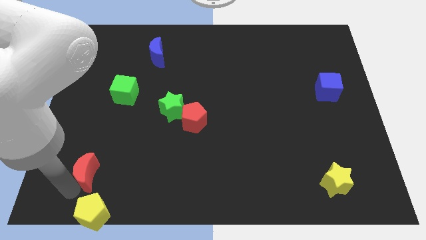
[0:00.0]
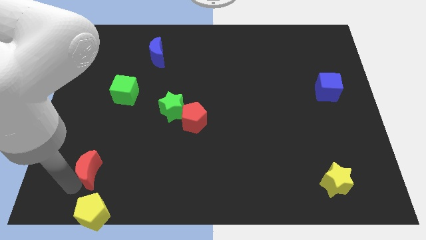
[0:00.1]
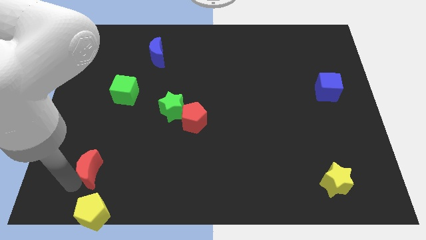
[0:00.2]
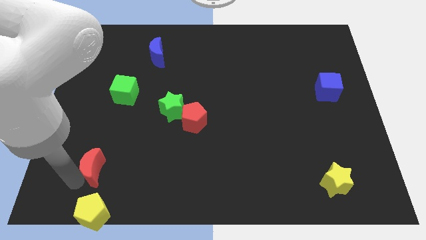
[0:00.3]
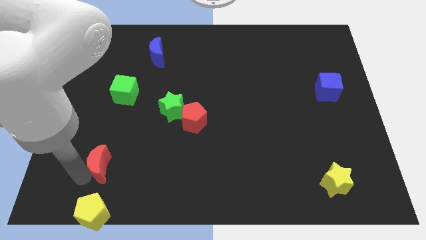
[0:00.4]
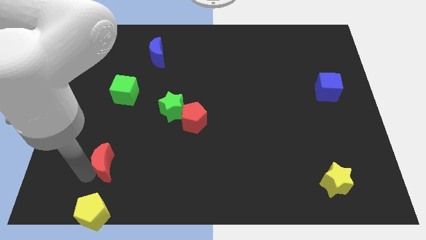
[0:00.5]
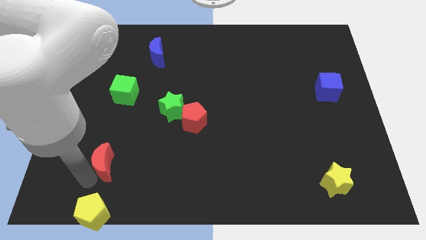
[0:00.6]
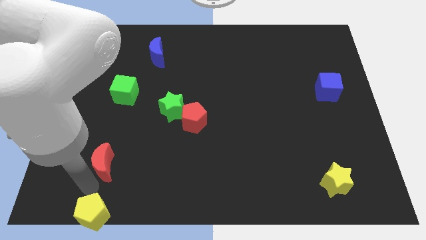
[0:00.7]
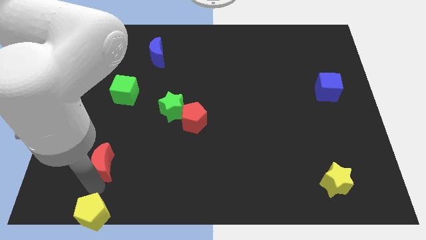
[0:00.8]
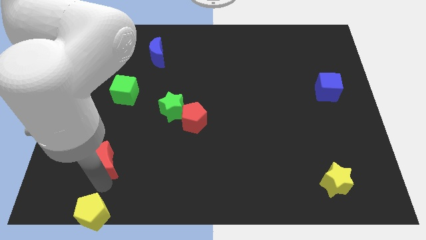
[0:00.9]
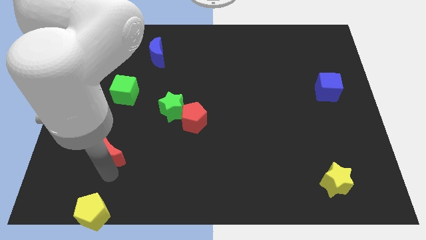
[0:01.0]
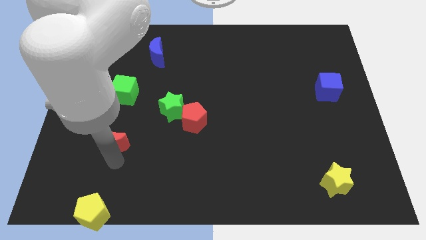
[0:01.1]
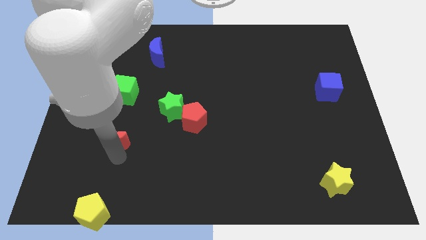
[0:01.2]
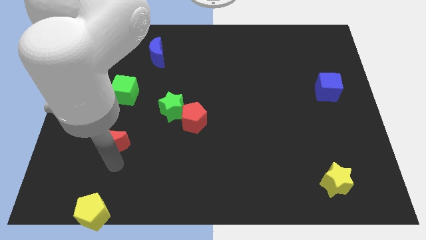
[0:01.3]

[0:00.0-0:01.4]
move red moon slightly upwards

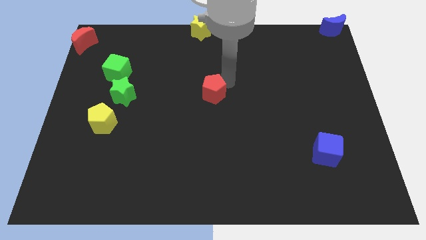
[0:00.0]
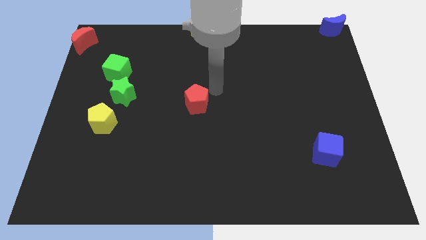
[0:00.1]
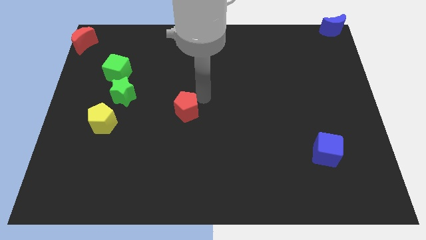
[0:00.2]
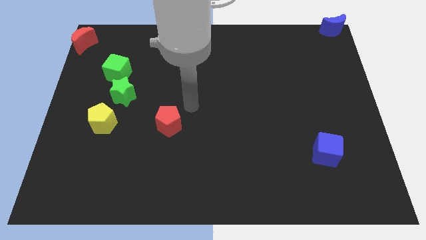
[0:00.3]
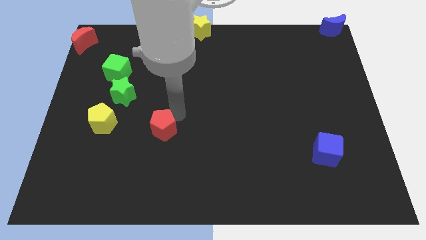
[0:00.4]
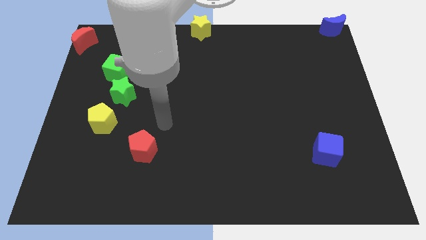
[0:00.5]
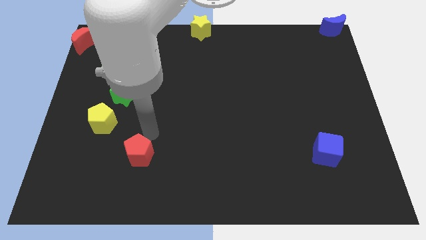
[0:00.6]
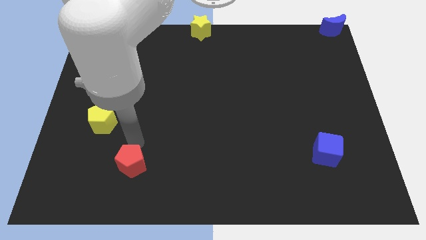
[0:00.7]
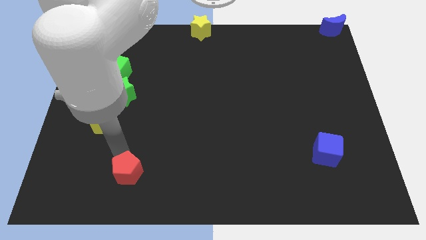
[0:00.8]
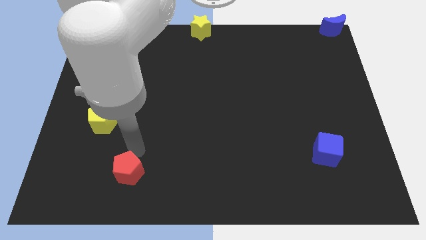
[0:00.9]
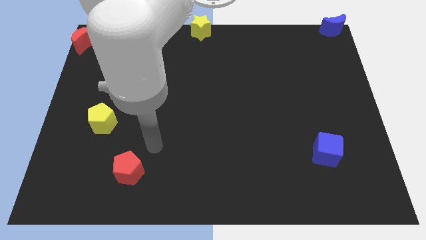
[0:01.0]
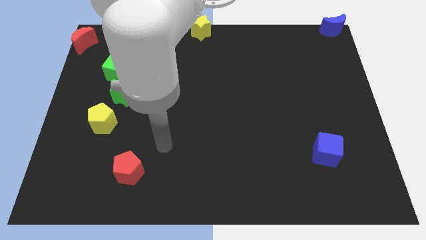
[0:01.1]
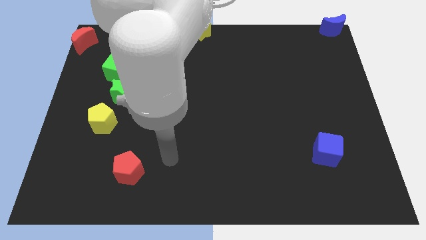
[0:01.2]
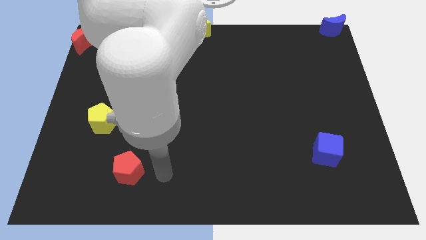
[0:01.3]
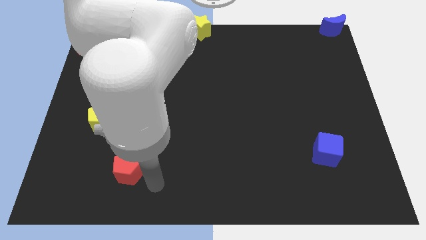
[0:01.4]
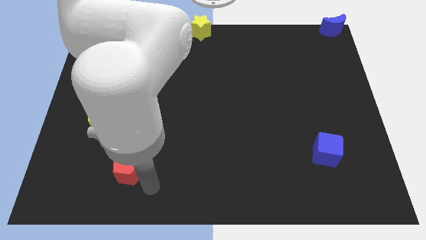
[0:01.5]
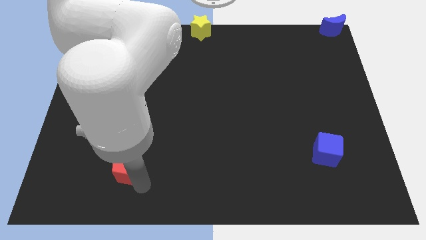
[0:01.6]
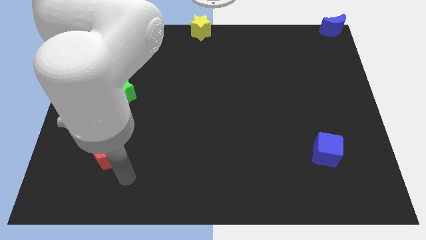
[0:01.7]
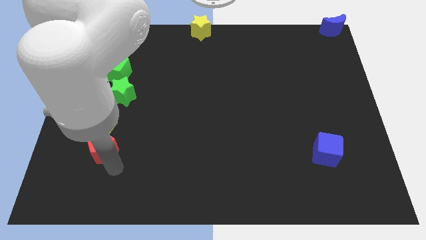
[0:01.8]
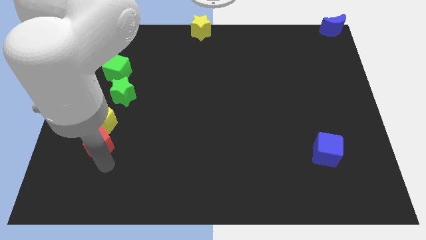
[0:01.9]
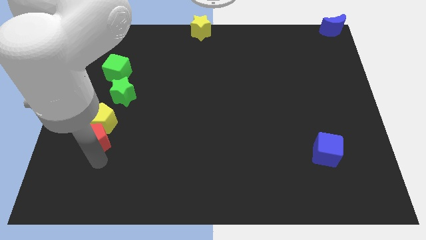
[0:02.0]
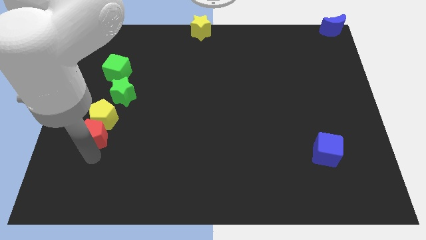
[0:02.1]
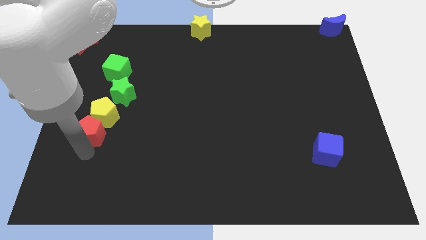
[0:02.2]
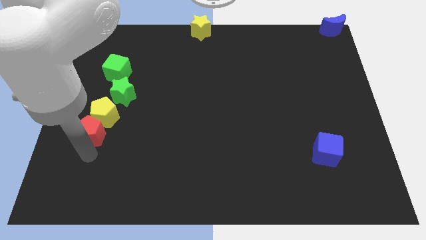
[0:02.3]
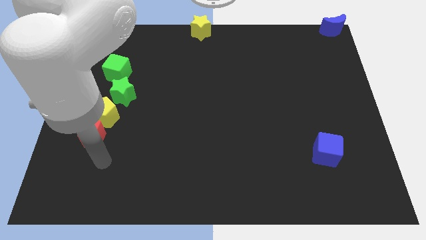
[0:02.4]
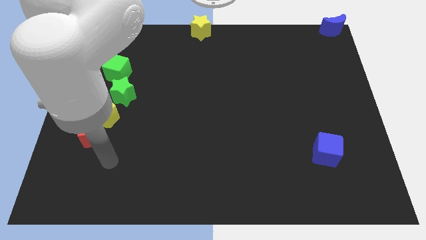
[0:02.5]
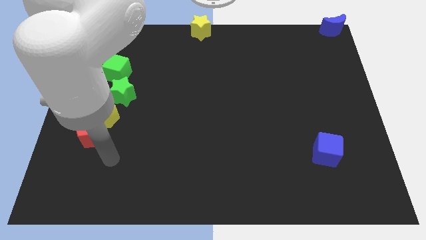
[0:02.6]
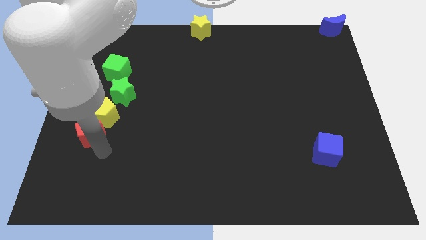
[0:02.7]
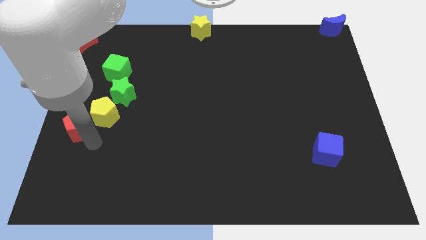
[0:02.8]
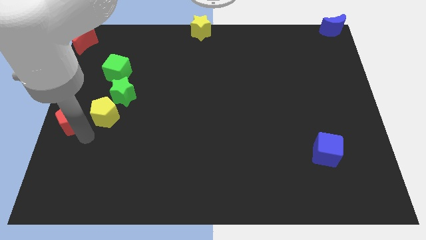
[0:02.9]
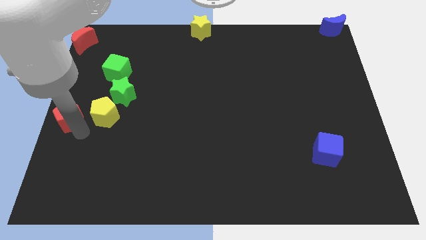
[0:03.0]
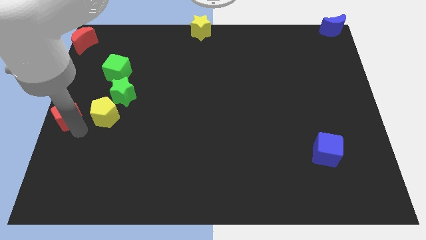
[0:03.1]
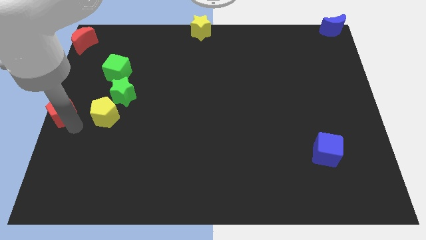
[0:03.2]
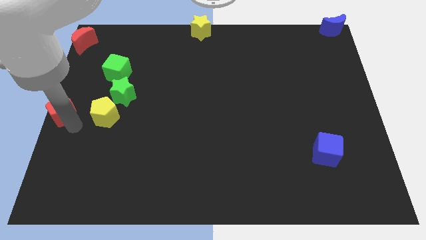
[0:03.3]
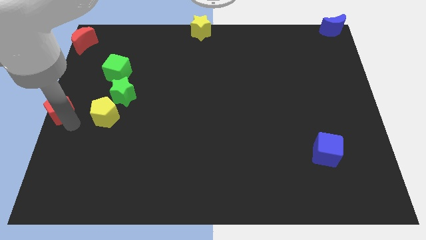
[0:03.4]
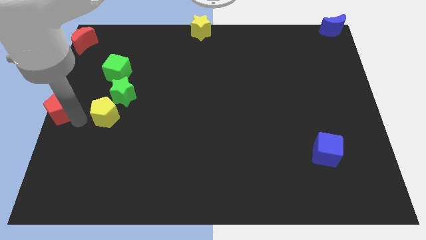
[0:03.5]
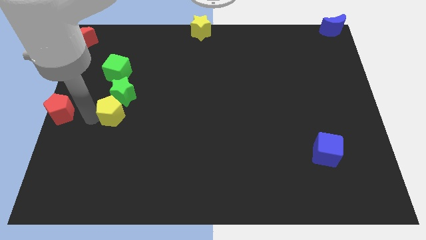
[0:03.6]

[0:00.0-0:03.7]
move the red pentagon to the center left

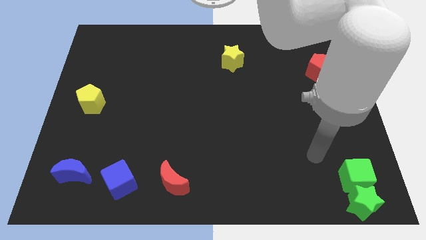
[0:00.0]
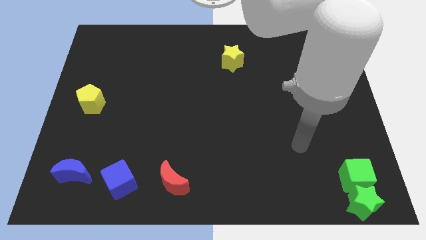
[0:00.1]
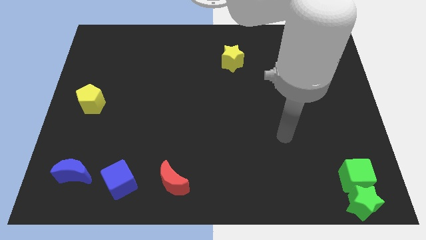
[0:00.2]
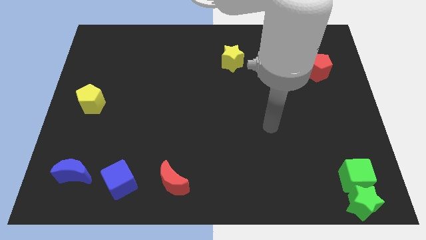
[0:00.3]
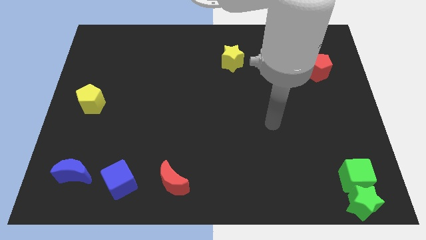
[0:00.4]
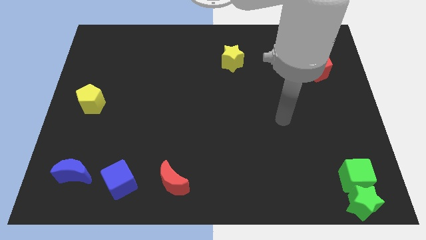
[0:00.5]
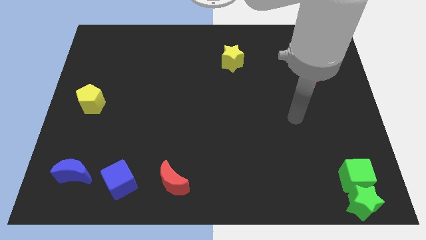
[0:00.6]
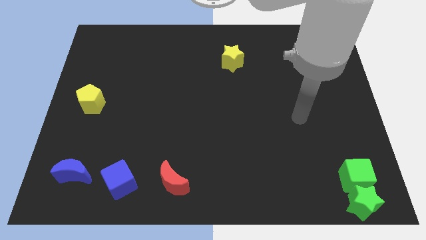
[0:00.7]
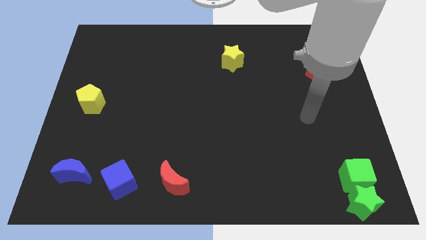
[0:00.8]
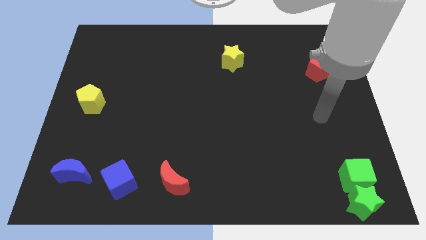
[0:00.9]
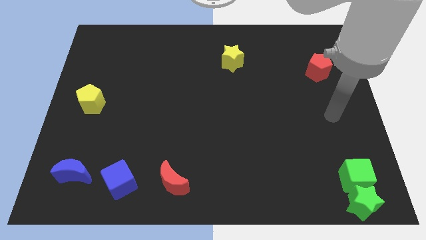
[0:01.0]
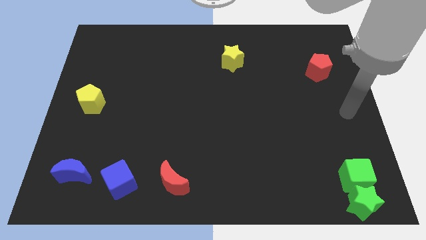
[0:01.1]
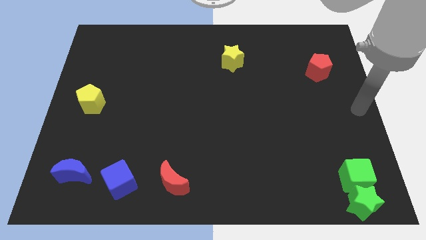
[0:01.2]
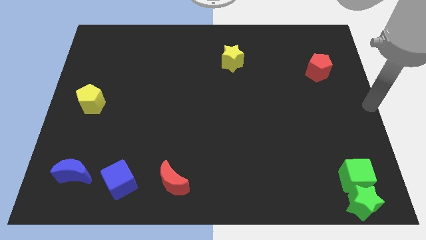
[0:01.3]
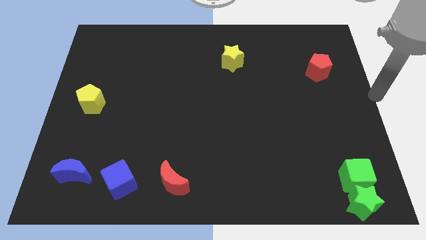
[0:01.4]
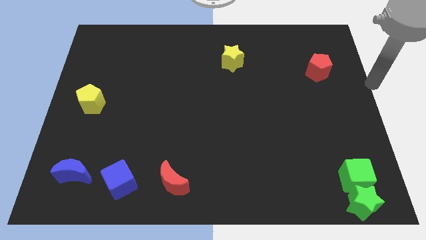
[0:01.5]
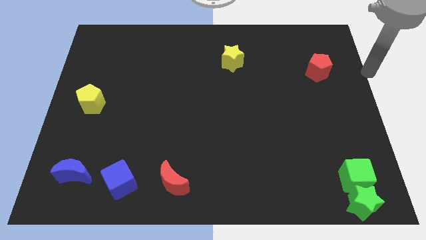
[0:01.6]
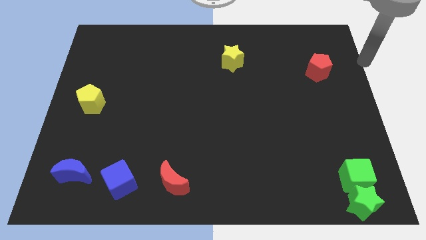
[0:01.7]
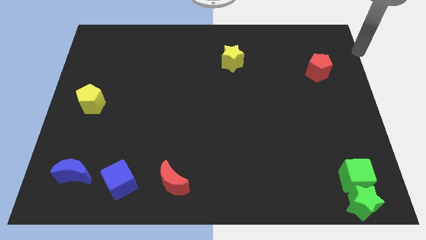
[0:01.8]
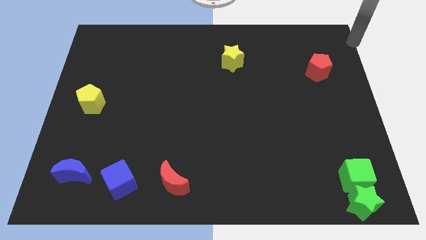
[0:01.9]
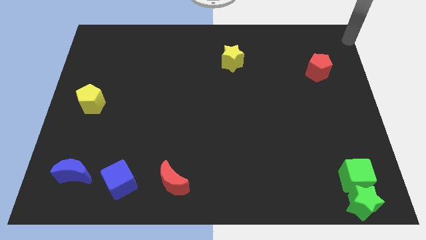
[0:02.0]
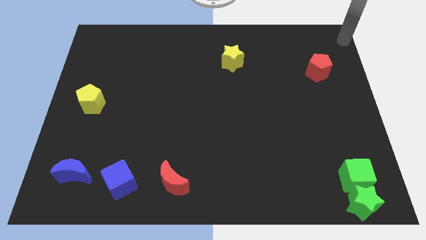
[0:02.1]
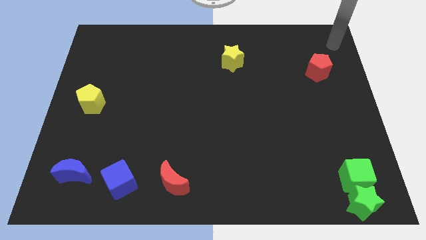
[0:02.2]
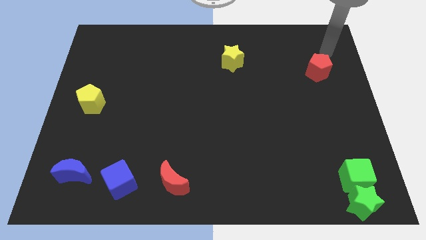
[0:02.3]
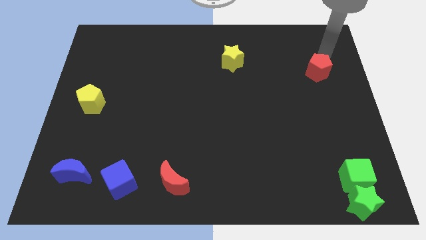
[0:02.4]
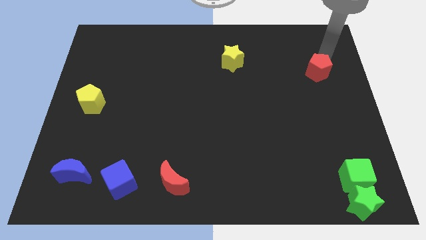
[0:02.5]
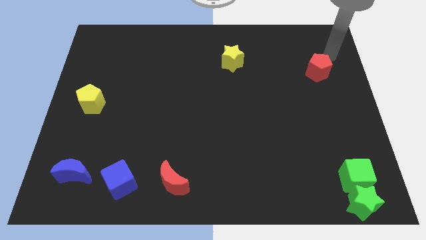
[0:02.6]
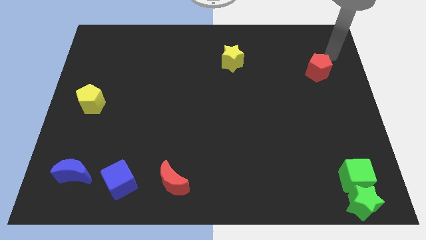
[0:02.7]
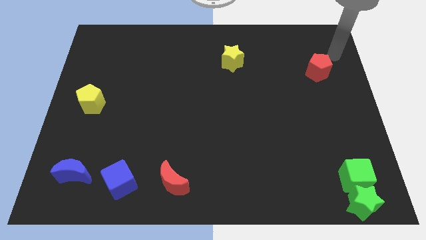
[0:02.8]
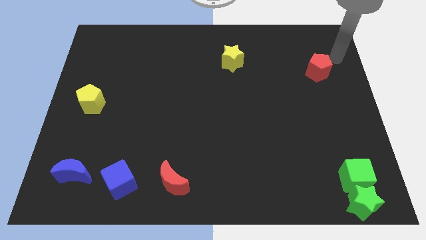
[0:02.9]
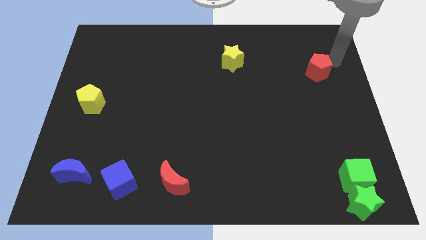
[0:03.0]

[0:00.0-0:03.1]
move your arm away from the green cube

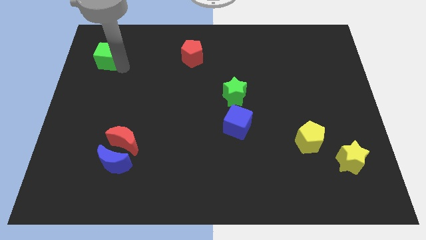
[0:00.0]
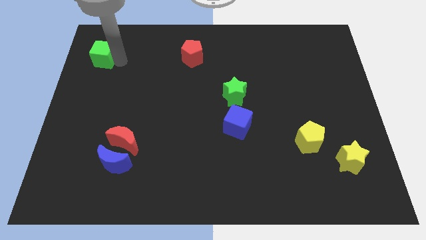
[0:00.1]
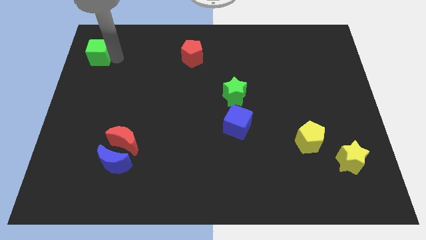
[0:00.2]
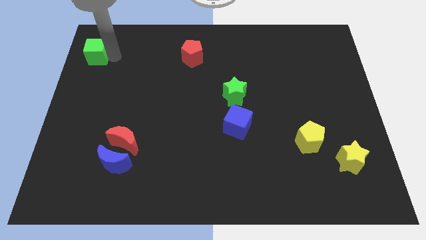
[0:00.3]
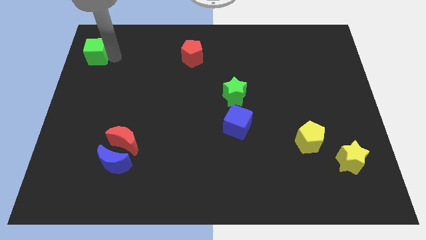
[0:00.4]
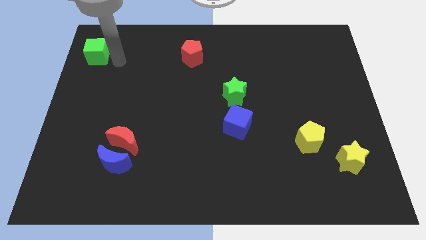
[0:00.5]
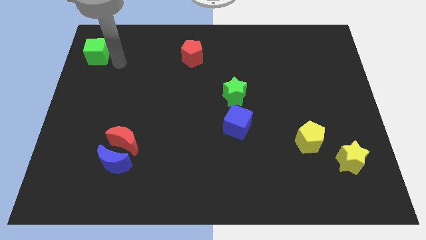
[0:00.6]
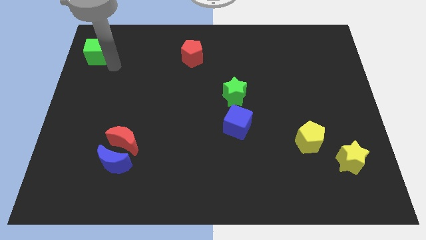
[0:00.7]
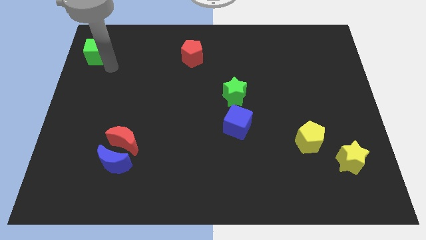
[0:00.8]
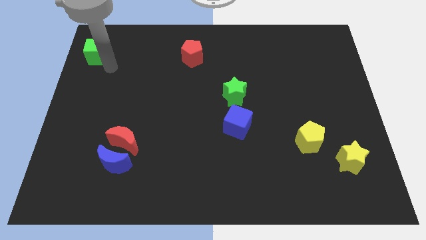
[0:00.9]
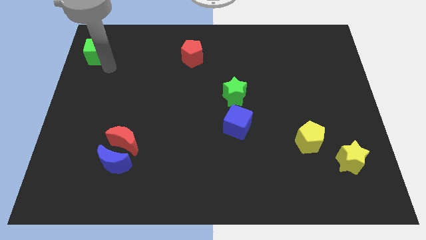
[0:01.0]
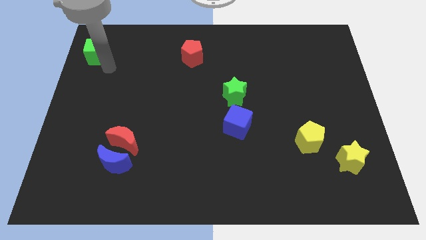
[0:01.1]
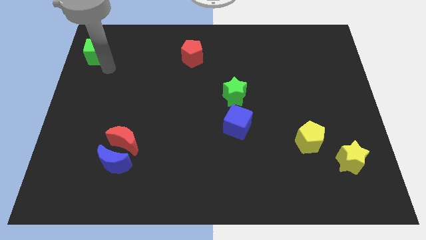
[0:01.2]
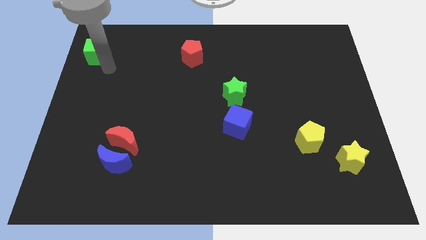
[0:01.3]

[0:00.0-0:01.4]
push the green cube to the top left
